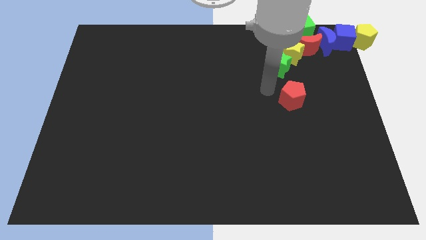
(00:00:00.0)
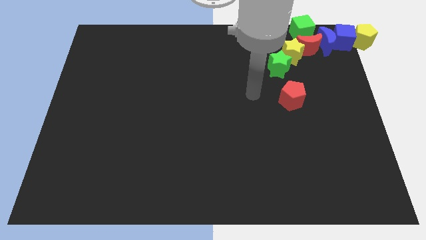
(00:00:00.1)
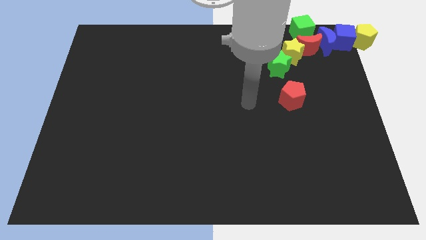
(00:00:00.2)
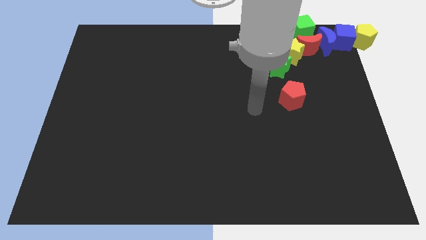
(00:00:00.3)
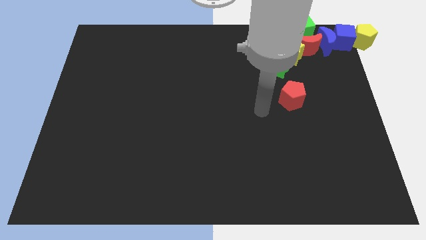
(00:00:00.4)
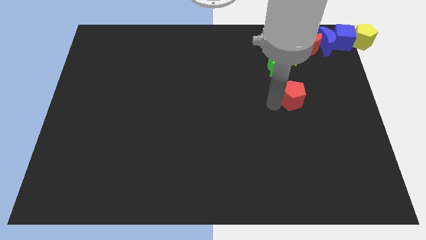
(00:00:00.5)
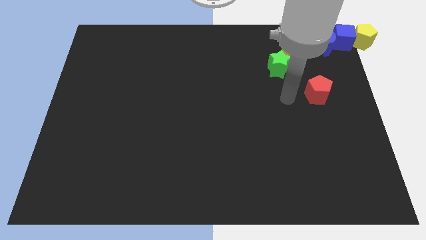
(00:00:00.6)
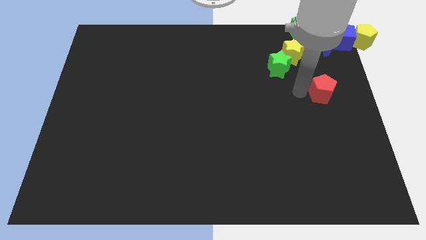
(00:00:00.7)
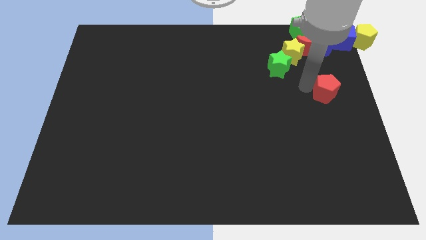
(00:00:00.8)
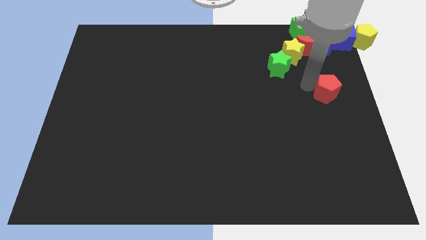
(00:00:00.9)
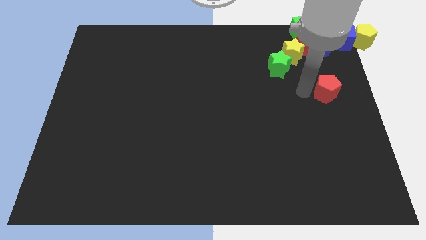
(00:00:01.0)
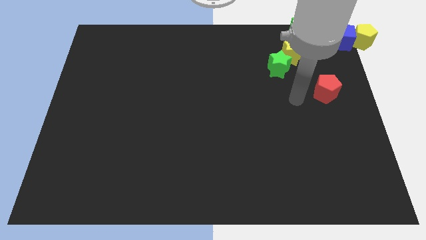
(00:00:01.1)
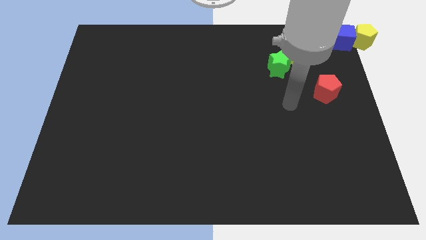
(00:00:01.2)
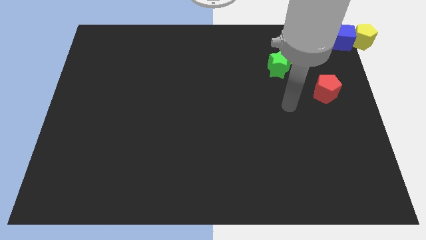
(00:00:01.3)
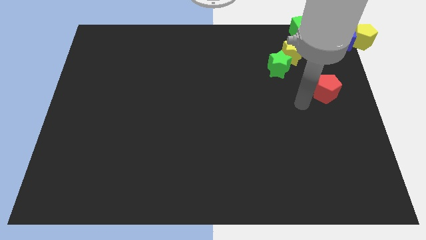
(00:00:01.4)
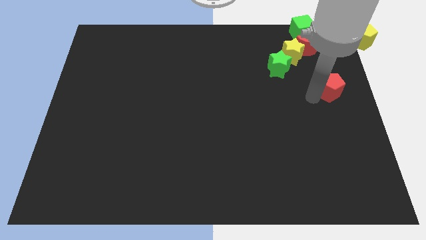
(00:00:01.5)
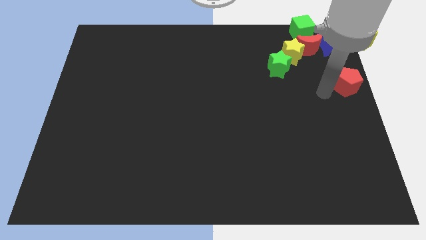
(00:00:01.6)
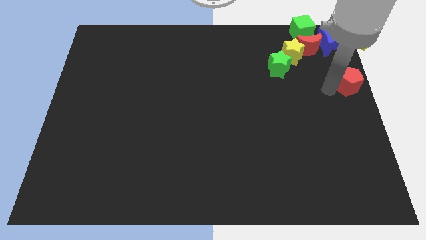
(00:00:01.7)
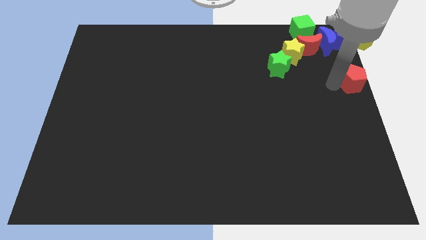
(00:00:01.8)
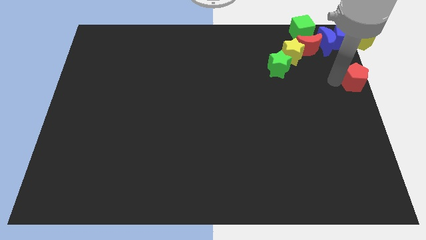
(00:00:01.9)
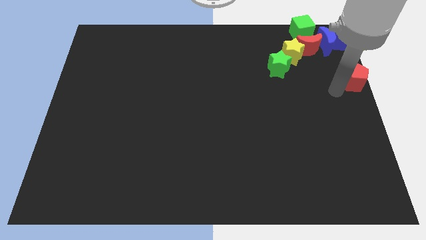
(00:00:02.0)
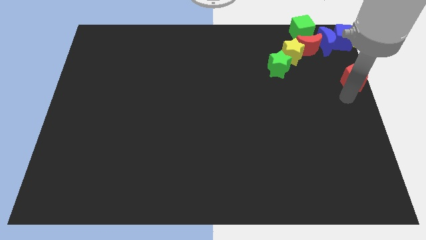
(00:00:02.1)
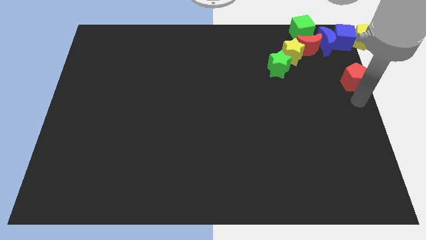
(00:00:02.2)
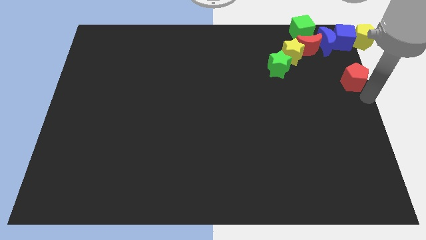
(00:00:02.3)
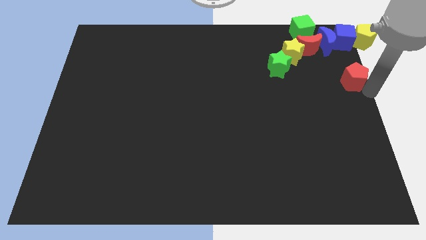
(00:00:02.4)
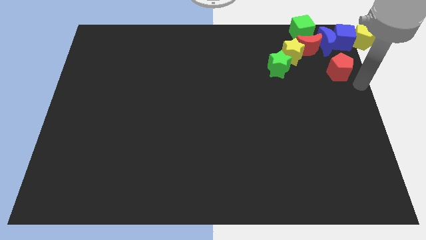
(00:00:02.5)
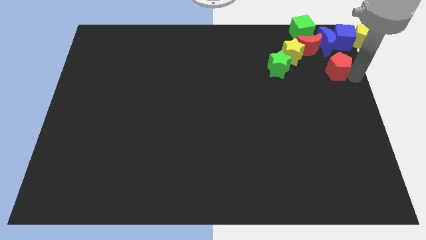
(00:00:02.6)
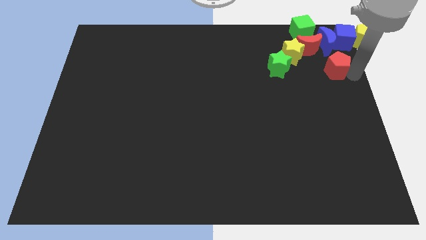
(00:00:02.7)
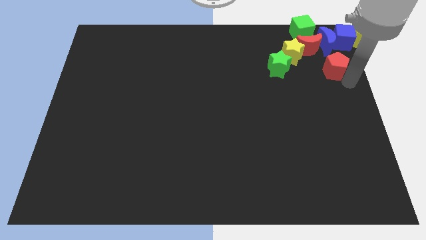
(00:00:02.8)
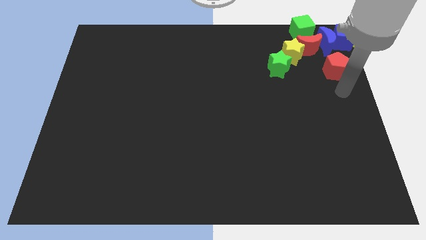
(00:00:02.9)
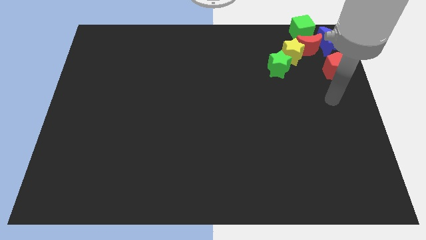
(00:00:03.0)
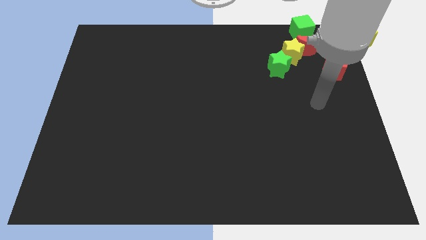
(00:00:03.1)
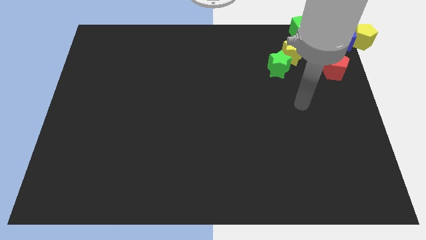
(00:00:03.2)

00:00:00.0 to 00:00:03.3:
move the red pentagon below the blue crescent

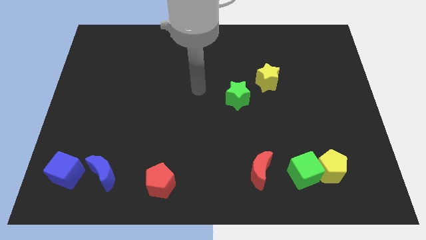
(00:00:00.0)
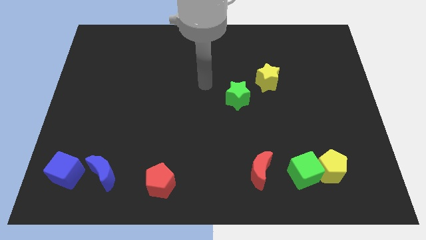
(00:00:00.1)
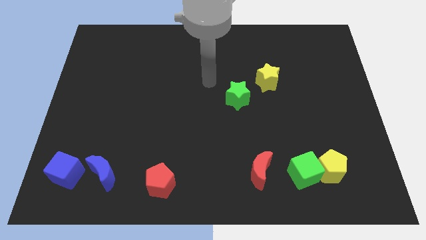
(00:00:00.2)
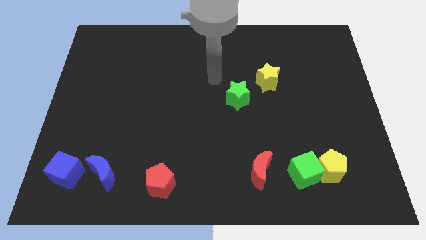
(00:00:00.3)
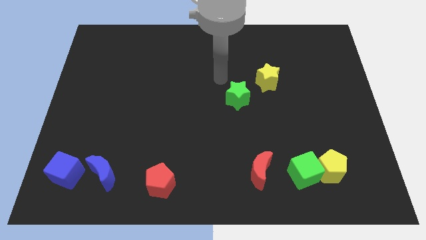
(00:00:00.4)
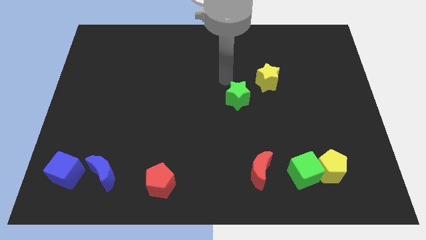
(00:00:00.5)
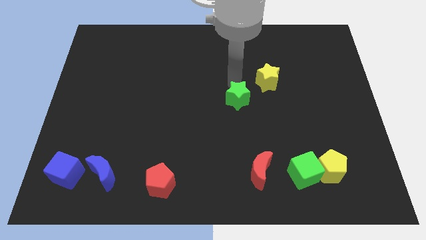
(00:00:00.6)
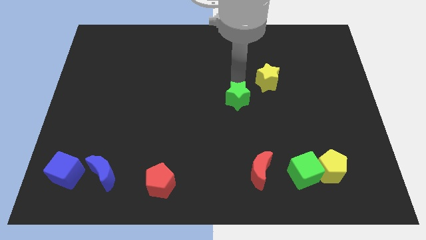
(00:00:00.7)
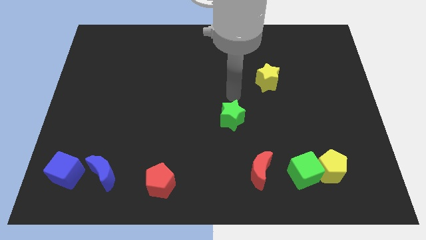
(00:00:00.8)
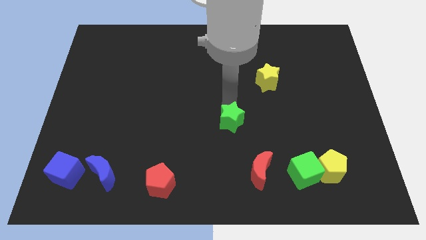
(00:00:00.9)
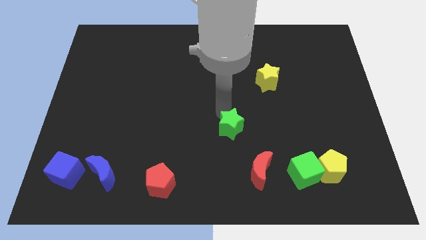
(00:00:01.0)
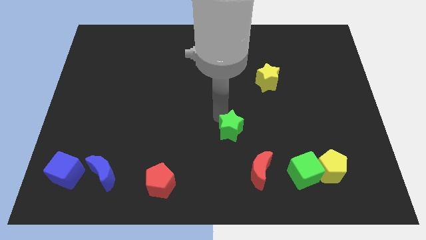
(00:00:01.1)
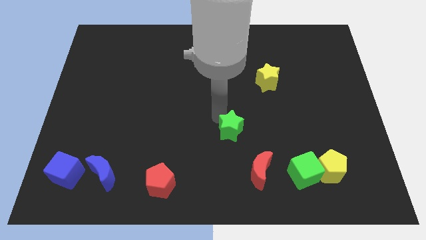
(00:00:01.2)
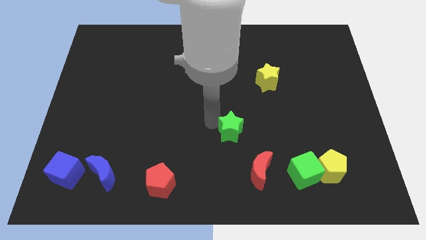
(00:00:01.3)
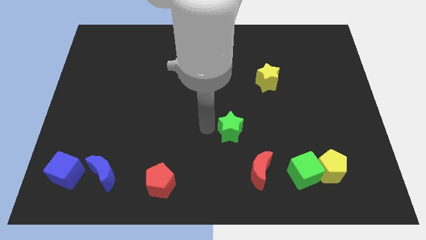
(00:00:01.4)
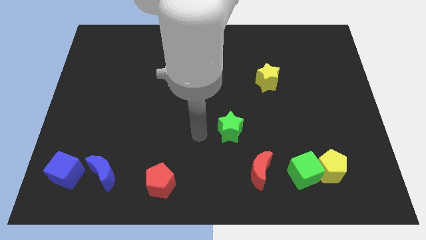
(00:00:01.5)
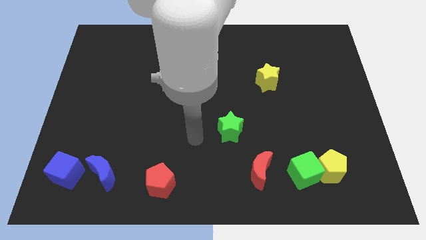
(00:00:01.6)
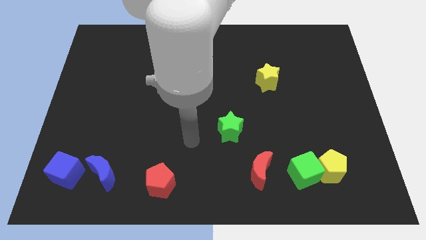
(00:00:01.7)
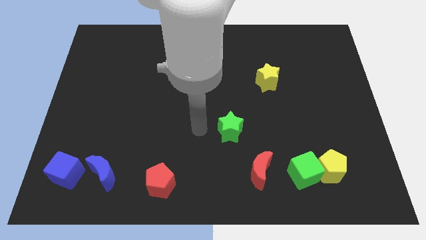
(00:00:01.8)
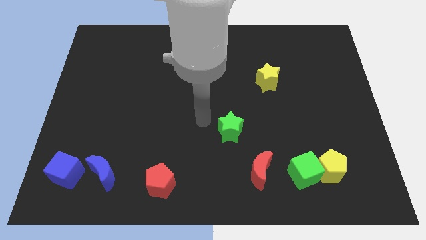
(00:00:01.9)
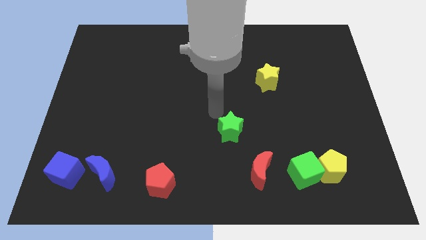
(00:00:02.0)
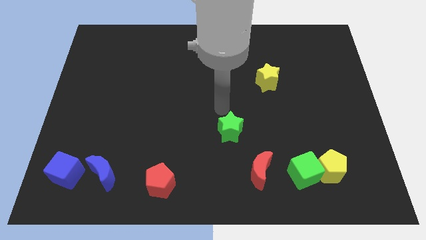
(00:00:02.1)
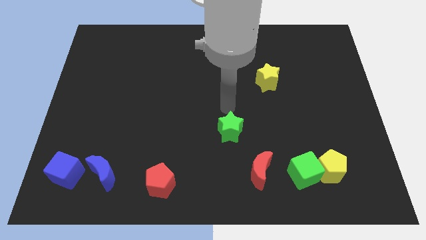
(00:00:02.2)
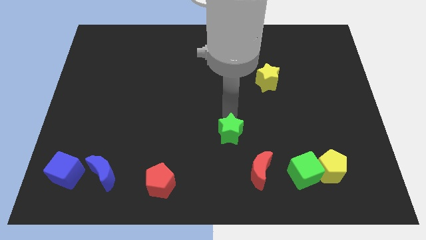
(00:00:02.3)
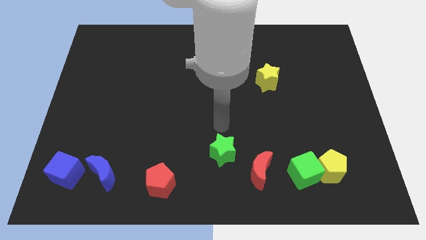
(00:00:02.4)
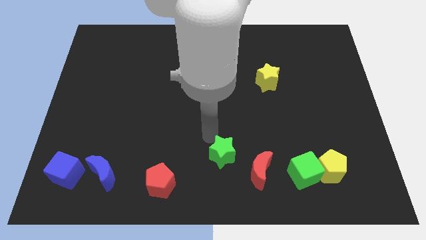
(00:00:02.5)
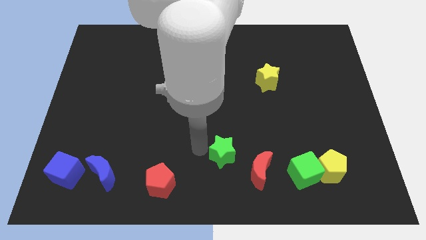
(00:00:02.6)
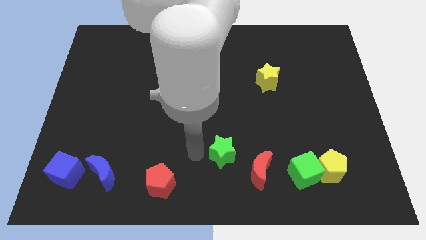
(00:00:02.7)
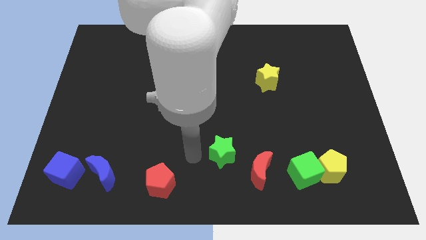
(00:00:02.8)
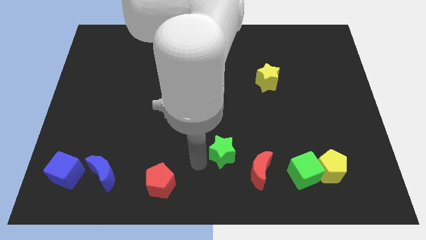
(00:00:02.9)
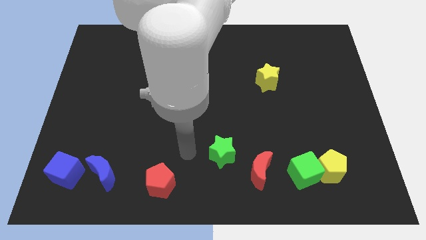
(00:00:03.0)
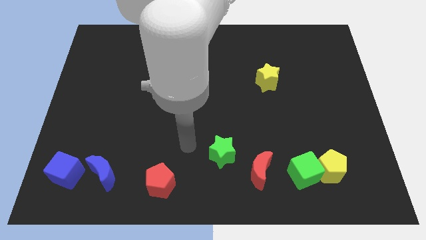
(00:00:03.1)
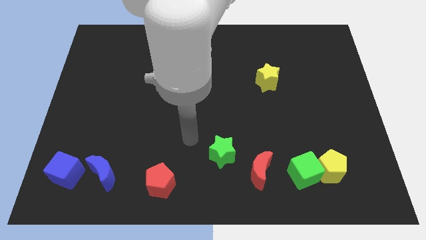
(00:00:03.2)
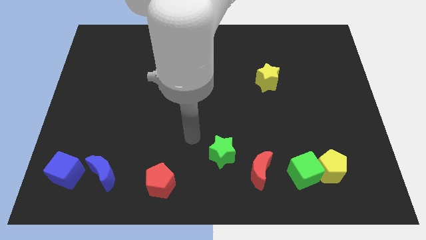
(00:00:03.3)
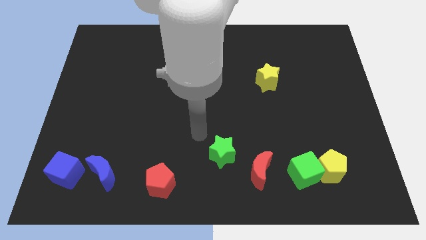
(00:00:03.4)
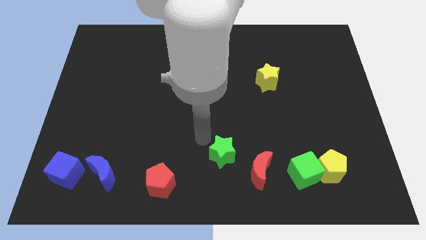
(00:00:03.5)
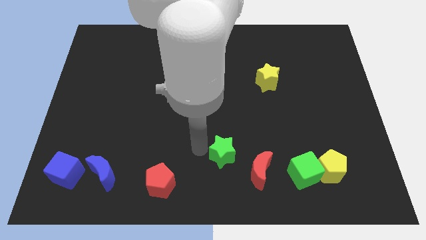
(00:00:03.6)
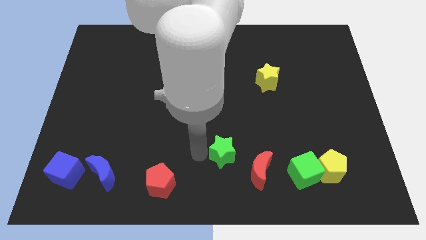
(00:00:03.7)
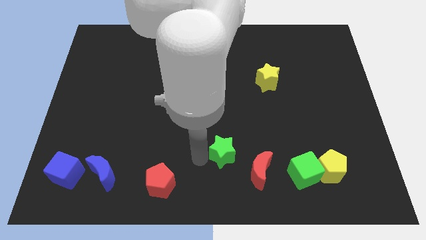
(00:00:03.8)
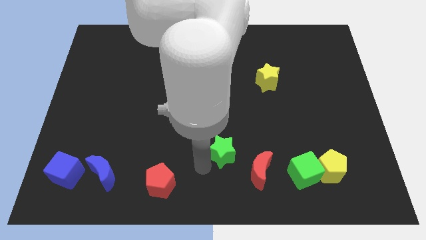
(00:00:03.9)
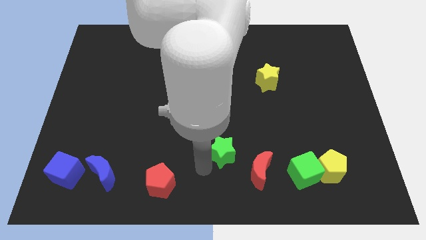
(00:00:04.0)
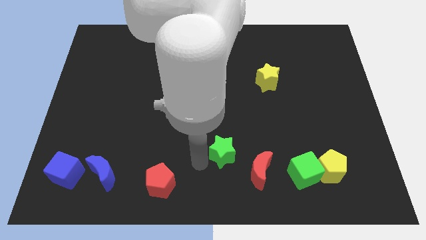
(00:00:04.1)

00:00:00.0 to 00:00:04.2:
move the green star towards down

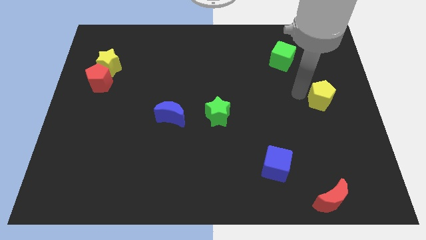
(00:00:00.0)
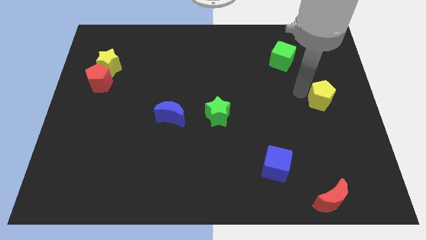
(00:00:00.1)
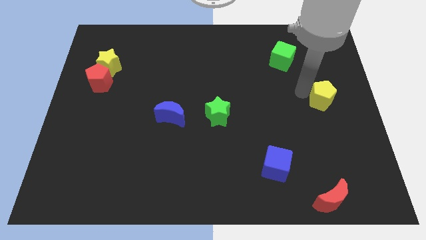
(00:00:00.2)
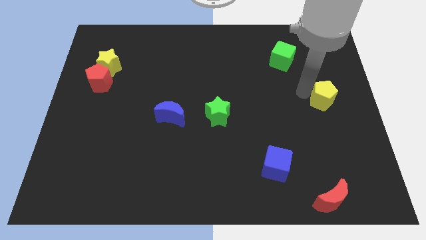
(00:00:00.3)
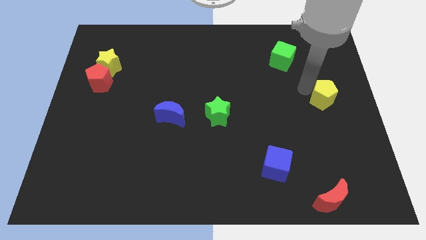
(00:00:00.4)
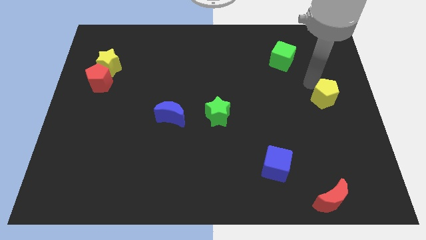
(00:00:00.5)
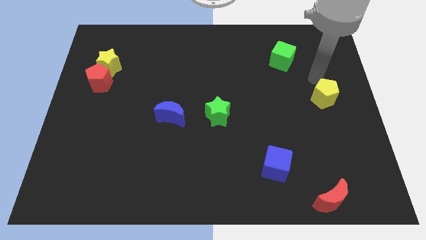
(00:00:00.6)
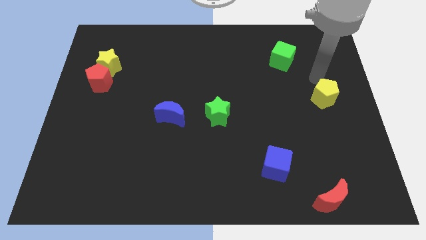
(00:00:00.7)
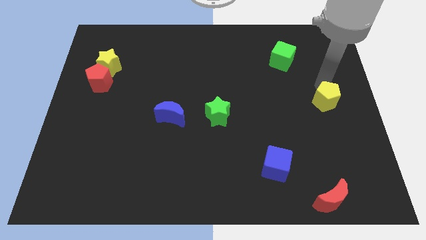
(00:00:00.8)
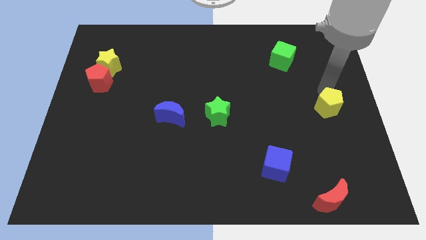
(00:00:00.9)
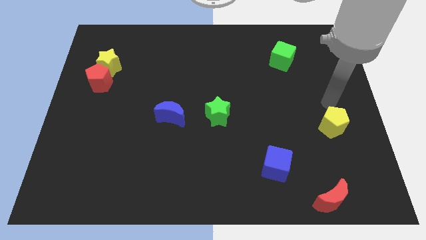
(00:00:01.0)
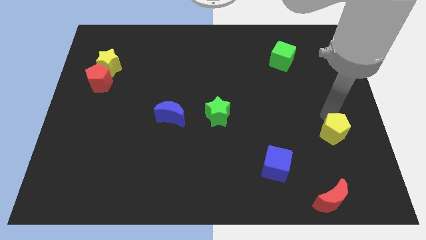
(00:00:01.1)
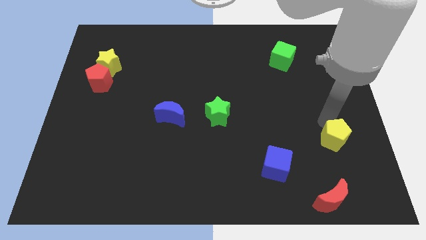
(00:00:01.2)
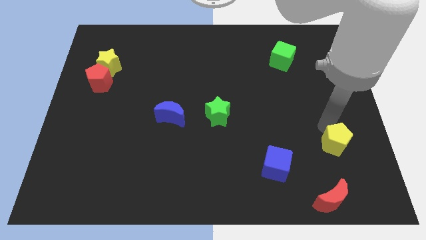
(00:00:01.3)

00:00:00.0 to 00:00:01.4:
move yellow pentagon towards the bottom side of the board
